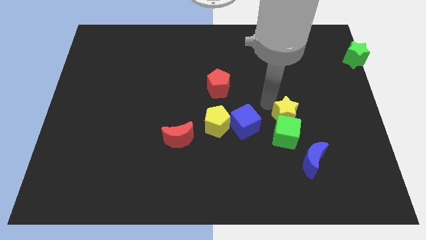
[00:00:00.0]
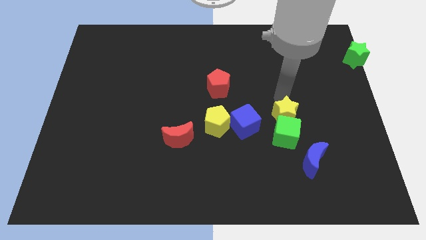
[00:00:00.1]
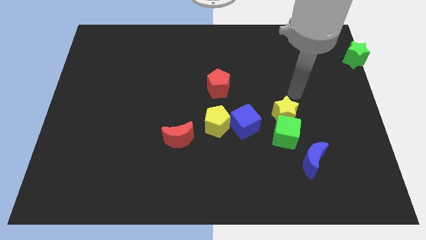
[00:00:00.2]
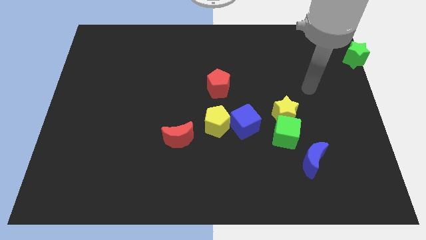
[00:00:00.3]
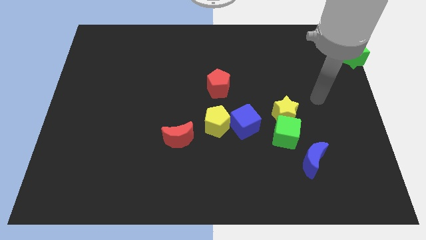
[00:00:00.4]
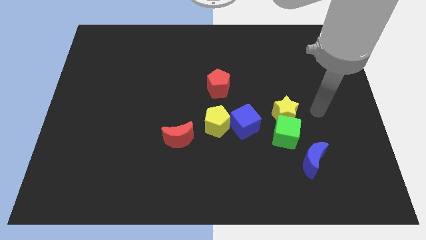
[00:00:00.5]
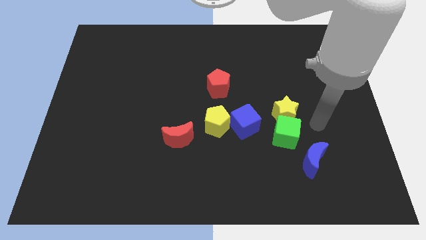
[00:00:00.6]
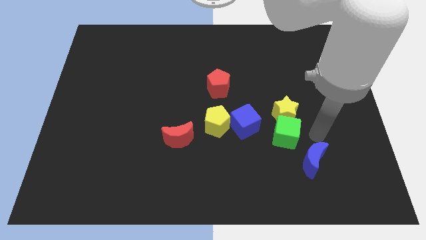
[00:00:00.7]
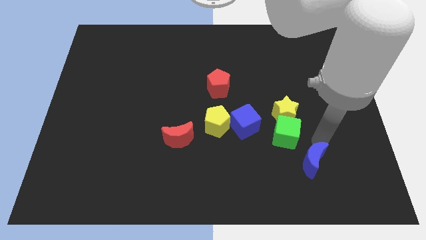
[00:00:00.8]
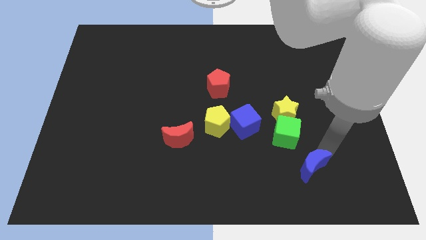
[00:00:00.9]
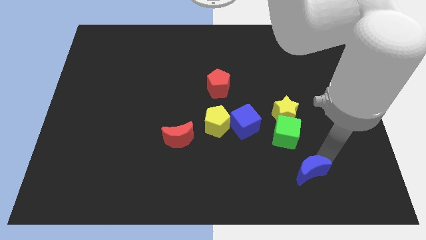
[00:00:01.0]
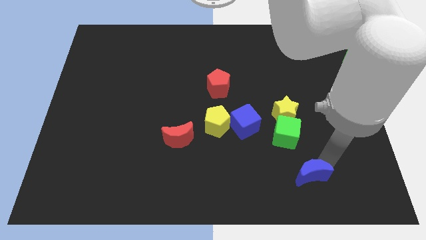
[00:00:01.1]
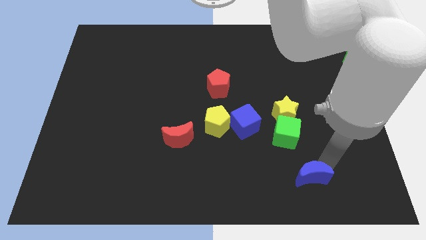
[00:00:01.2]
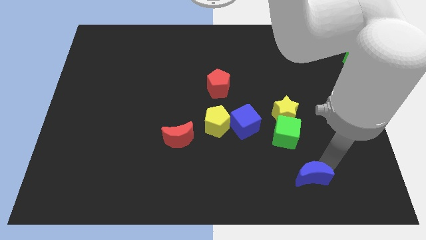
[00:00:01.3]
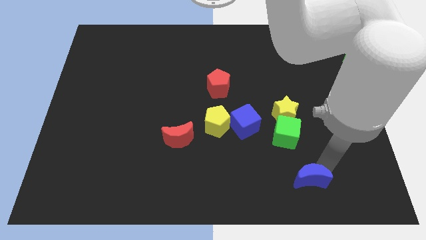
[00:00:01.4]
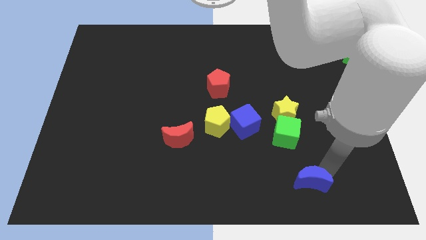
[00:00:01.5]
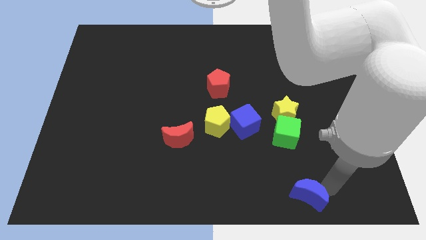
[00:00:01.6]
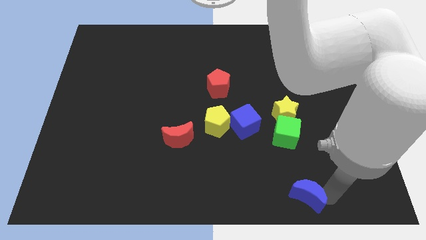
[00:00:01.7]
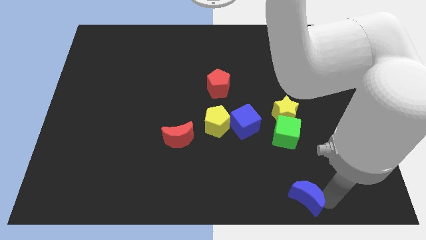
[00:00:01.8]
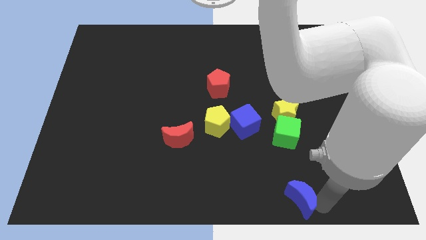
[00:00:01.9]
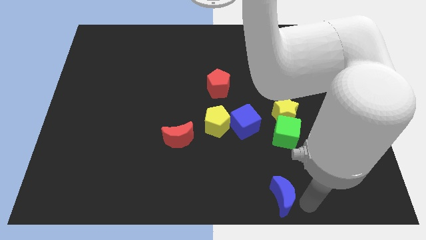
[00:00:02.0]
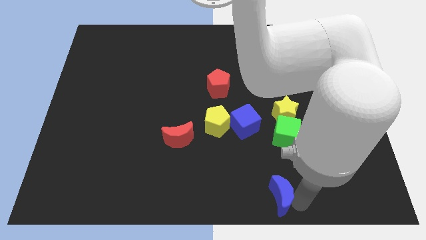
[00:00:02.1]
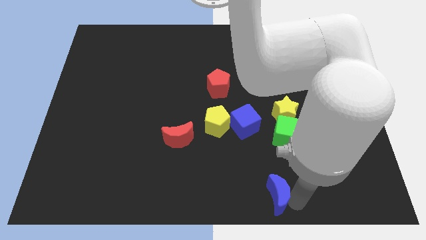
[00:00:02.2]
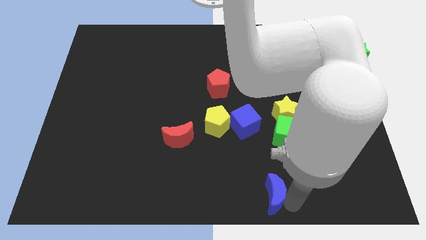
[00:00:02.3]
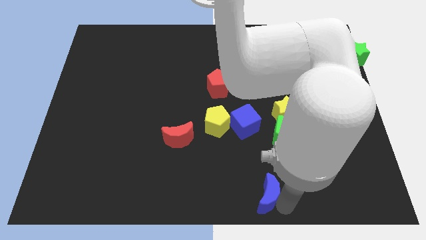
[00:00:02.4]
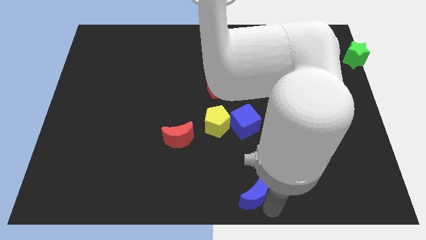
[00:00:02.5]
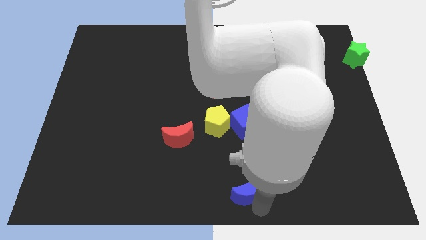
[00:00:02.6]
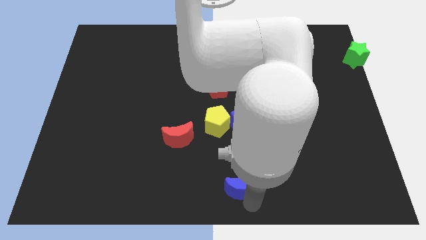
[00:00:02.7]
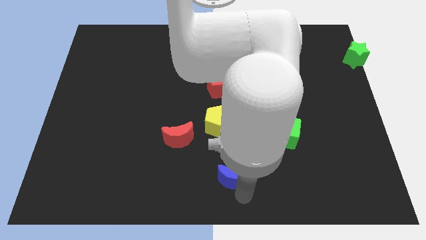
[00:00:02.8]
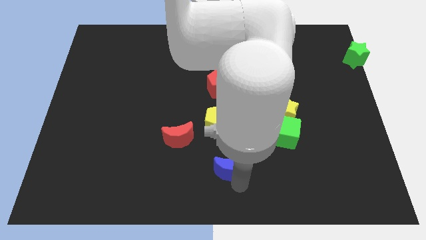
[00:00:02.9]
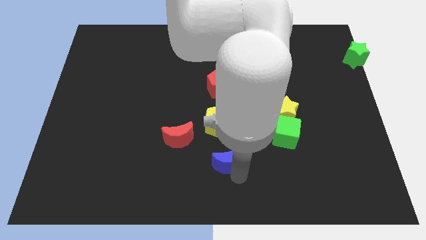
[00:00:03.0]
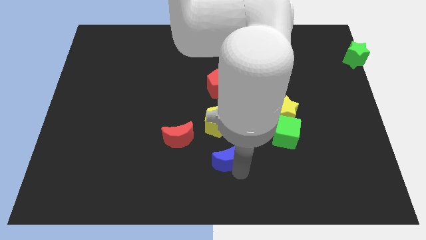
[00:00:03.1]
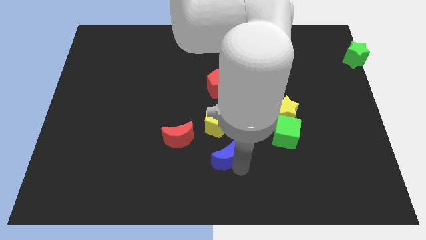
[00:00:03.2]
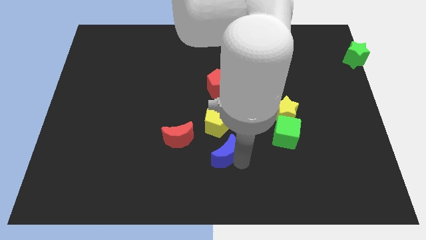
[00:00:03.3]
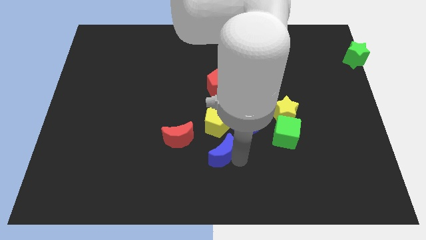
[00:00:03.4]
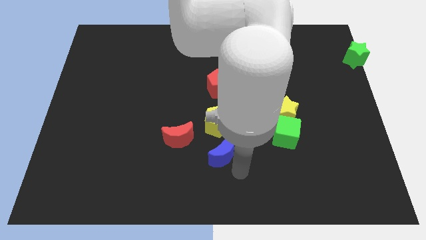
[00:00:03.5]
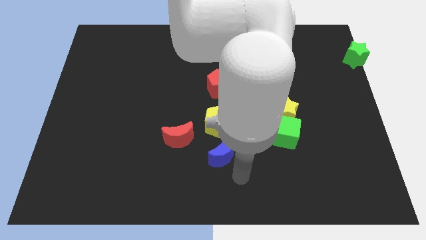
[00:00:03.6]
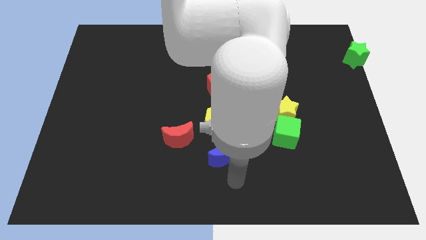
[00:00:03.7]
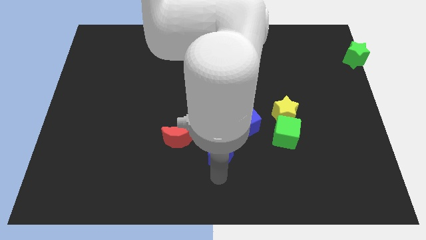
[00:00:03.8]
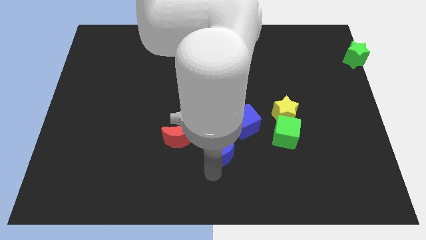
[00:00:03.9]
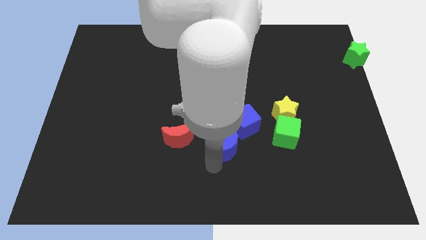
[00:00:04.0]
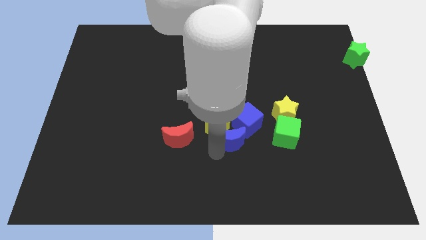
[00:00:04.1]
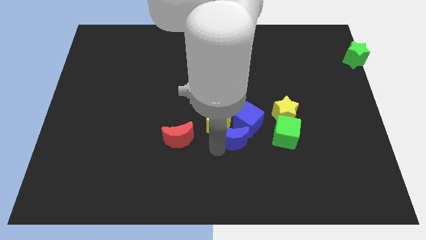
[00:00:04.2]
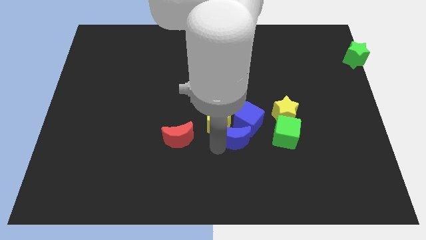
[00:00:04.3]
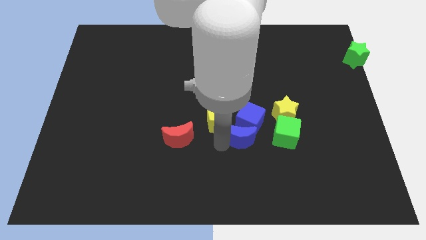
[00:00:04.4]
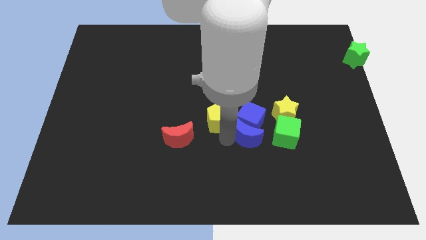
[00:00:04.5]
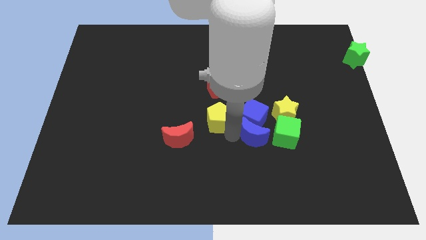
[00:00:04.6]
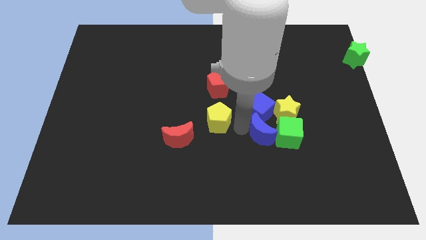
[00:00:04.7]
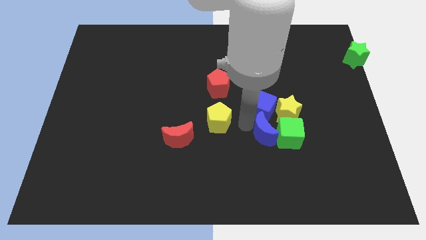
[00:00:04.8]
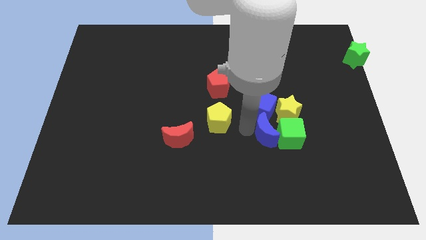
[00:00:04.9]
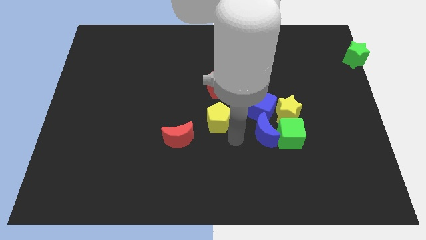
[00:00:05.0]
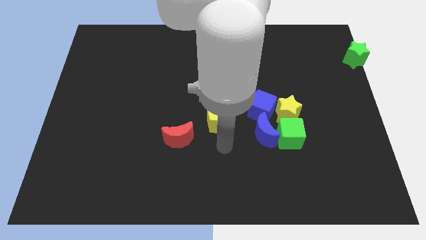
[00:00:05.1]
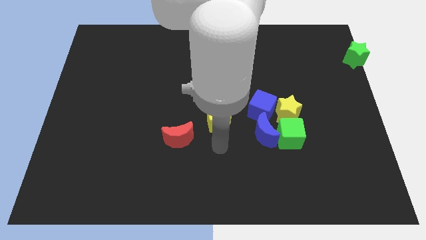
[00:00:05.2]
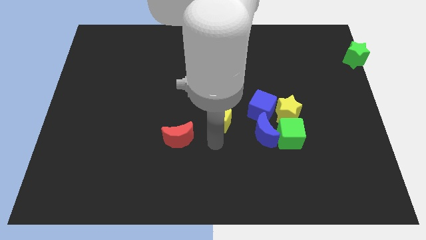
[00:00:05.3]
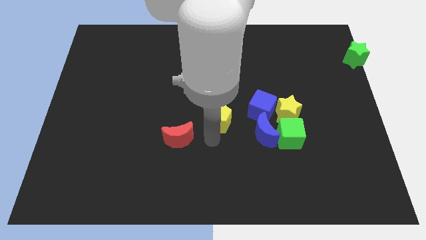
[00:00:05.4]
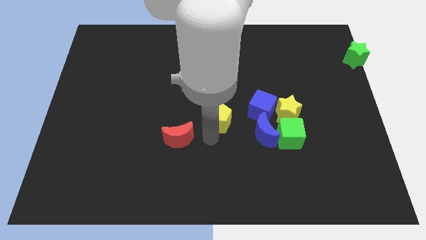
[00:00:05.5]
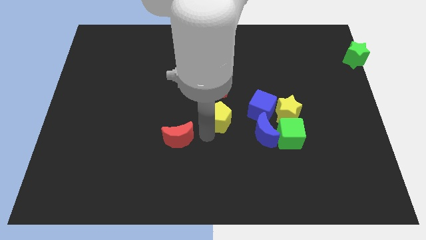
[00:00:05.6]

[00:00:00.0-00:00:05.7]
push the blue moon into the group of blocks

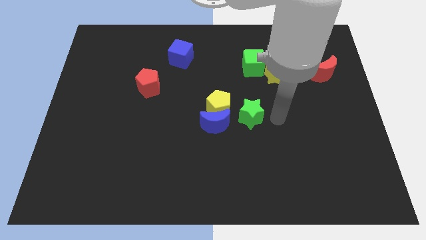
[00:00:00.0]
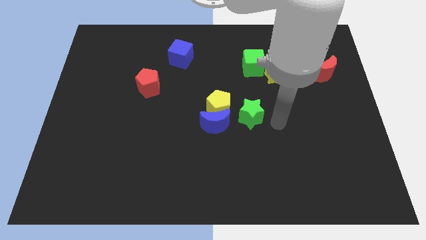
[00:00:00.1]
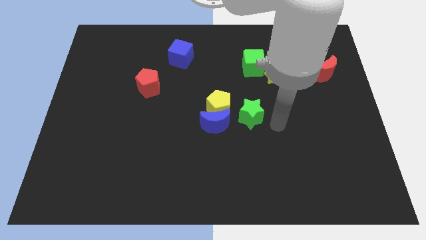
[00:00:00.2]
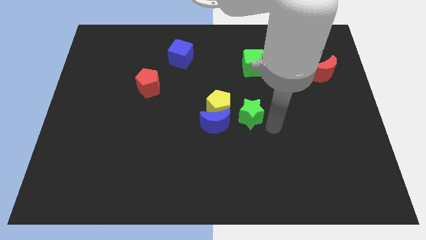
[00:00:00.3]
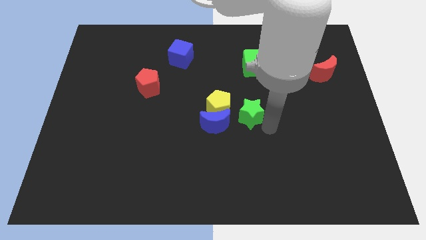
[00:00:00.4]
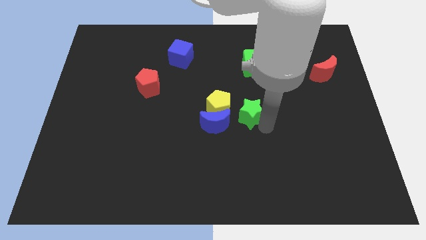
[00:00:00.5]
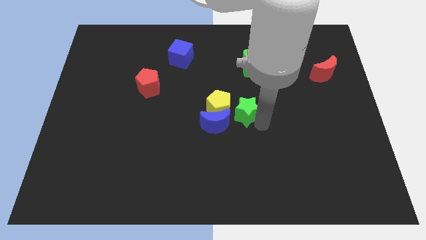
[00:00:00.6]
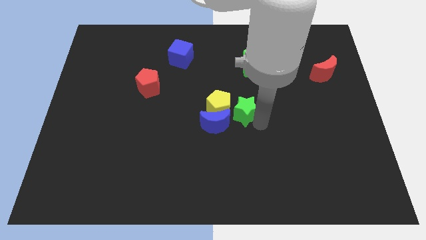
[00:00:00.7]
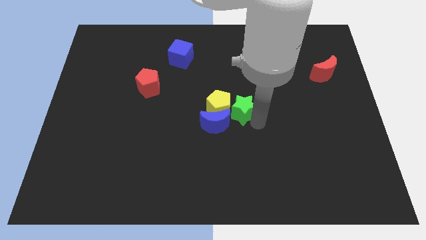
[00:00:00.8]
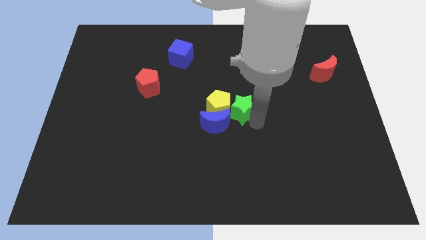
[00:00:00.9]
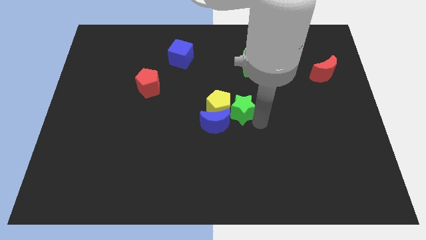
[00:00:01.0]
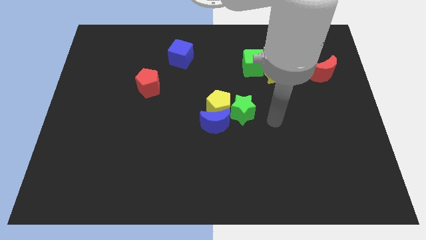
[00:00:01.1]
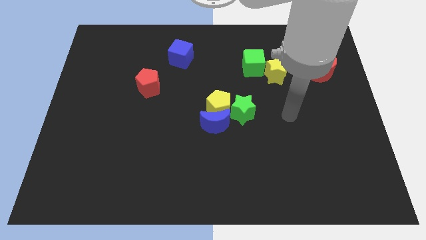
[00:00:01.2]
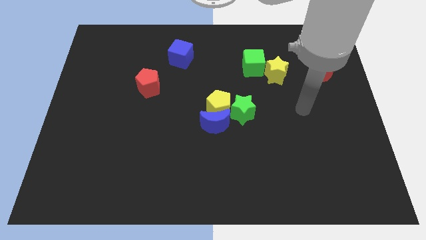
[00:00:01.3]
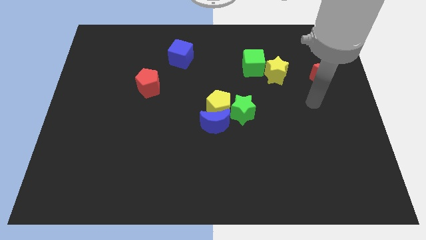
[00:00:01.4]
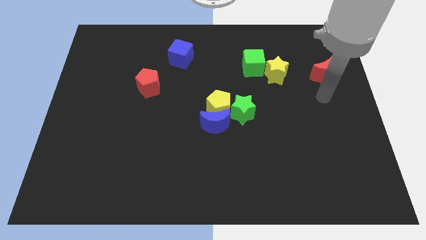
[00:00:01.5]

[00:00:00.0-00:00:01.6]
move the green star to the left side of the yellow pentagon

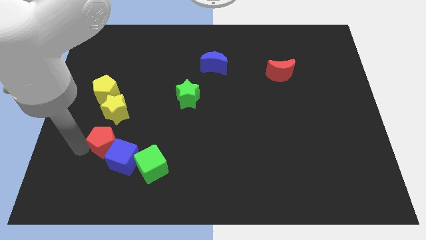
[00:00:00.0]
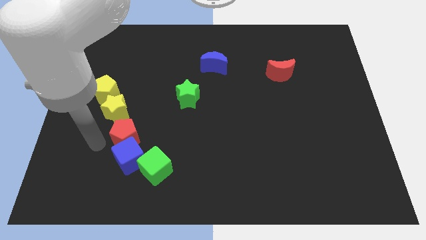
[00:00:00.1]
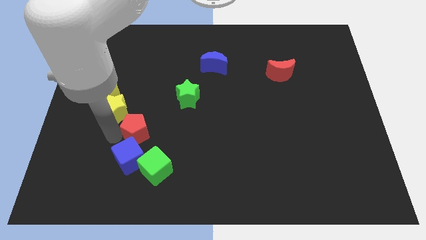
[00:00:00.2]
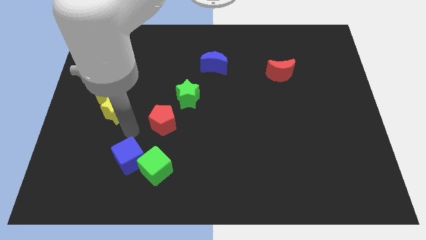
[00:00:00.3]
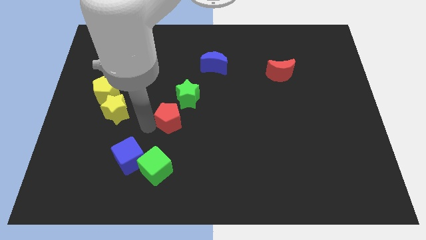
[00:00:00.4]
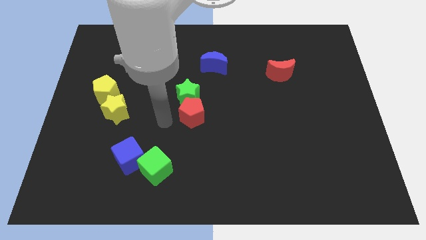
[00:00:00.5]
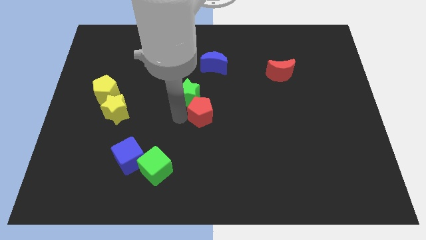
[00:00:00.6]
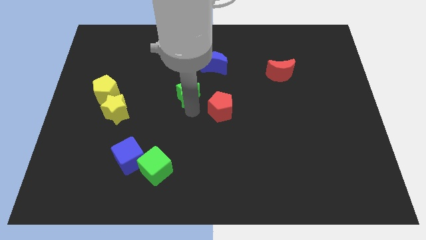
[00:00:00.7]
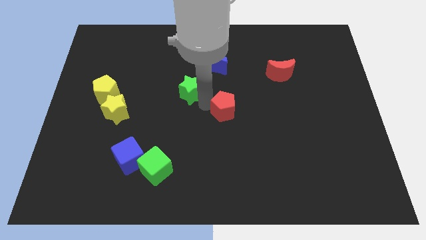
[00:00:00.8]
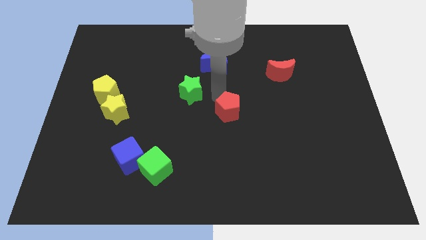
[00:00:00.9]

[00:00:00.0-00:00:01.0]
move the red pentagon towards green star and place it in center

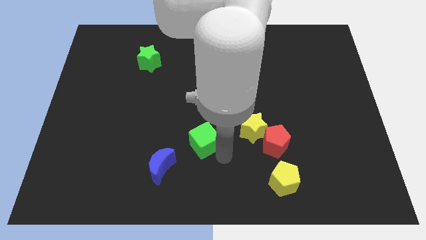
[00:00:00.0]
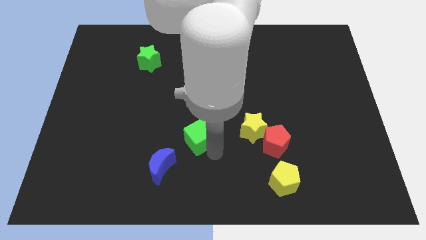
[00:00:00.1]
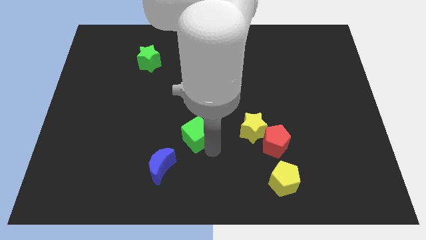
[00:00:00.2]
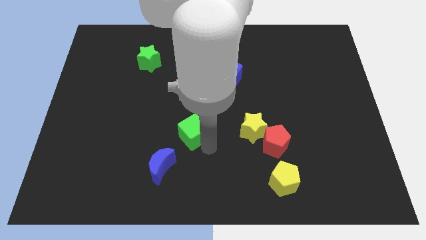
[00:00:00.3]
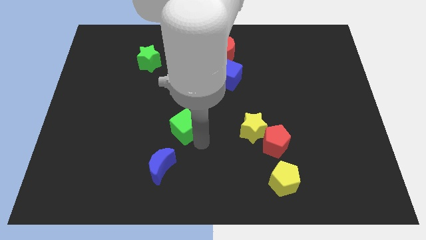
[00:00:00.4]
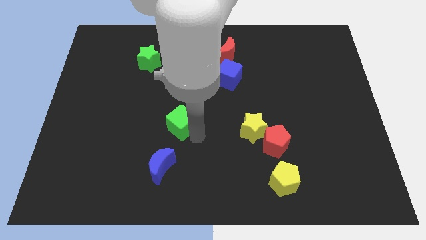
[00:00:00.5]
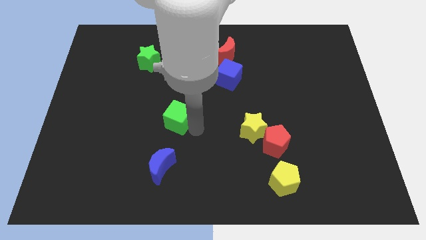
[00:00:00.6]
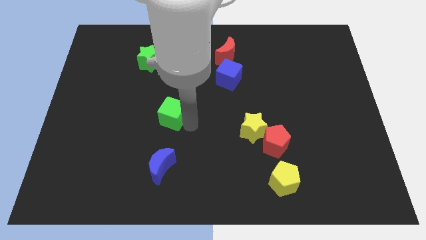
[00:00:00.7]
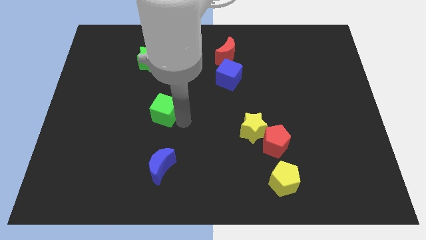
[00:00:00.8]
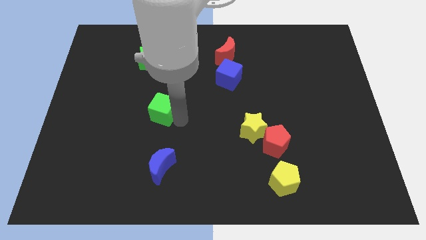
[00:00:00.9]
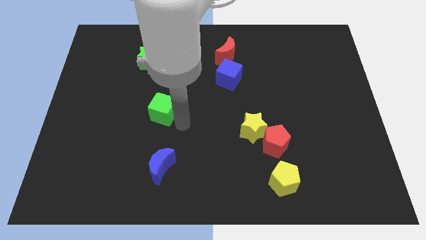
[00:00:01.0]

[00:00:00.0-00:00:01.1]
move green cube above the blue moon
